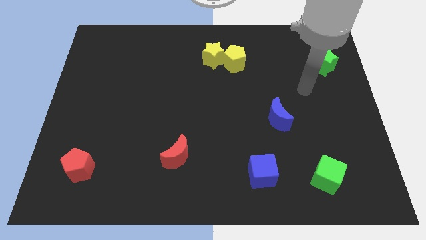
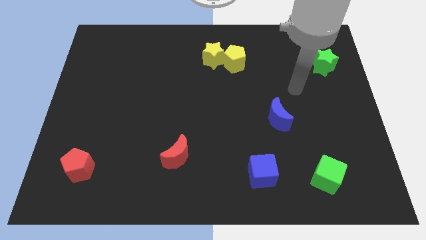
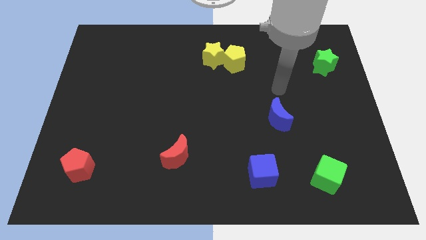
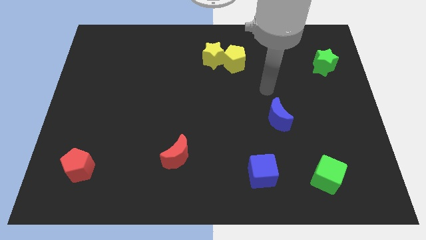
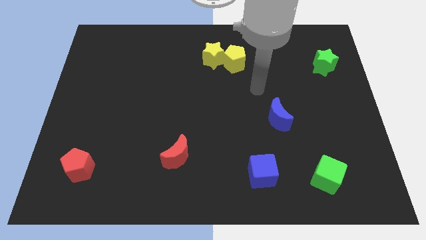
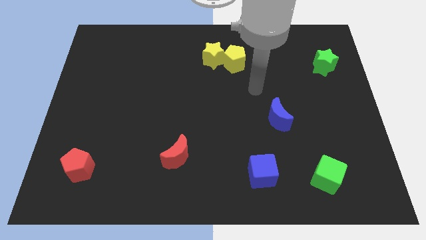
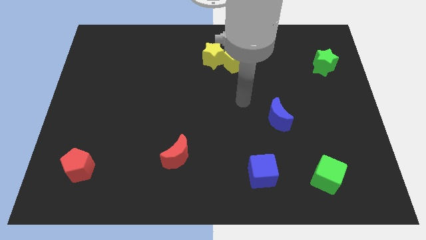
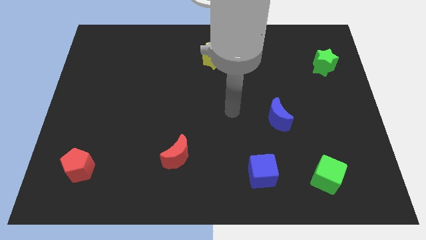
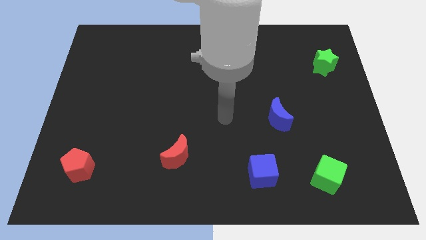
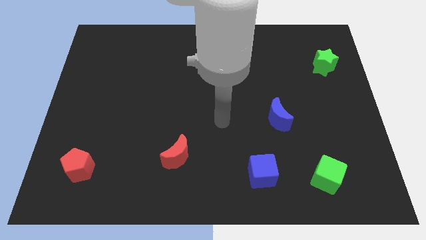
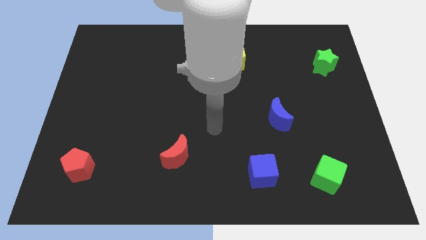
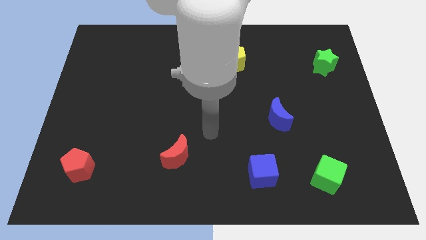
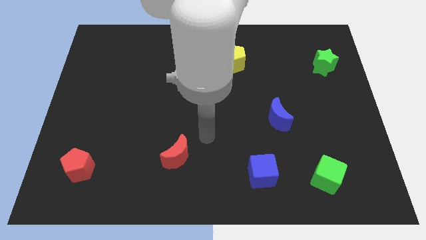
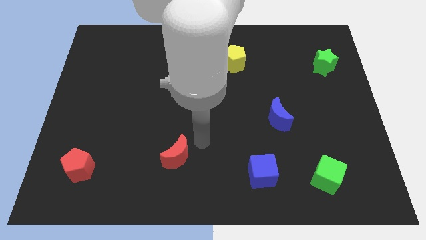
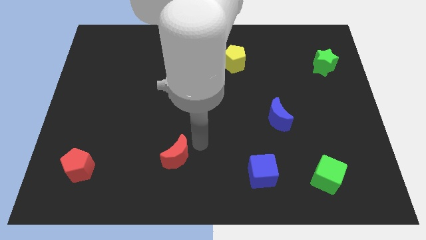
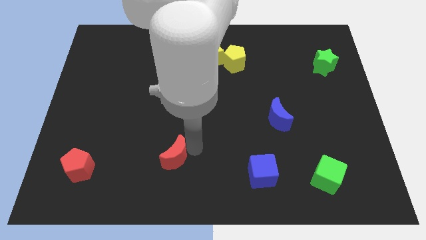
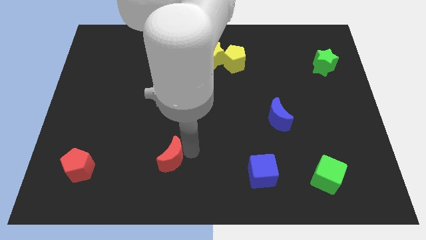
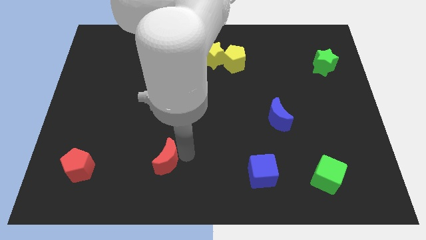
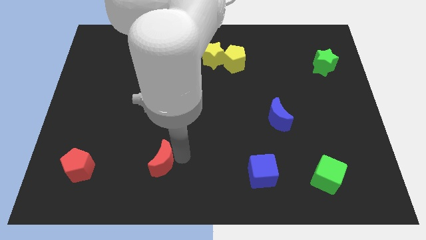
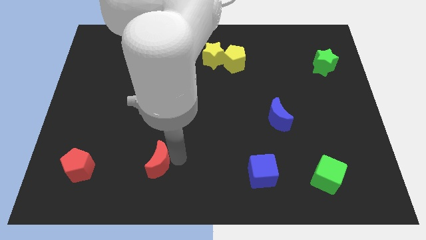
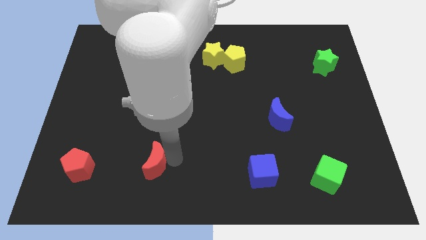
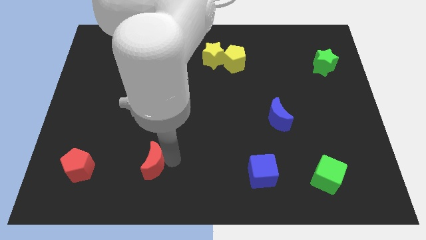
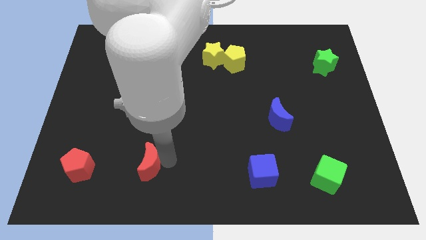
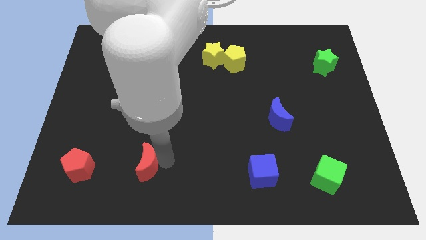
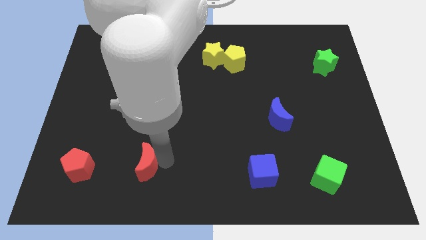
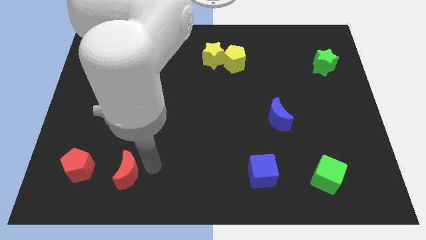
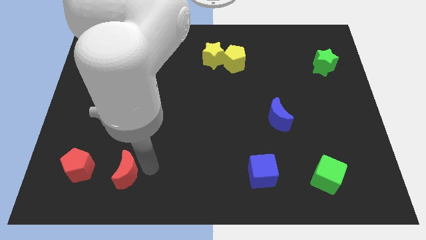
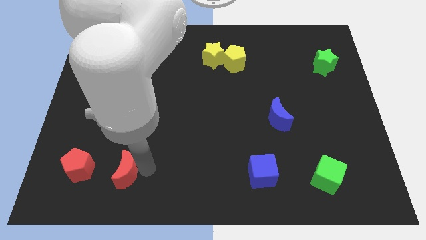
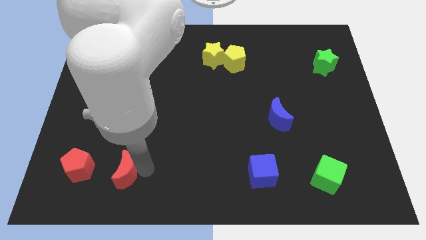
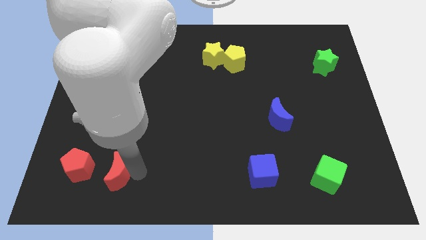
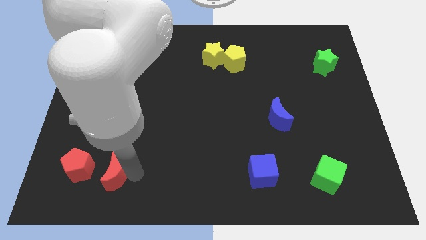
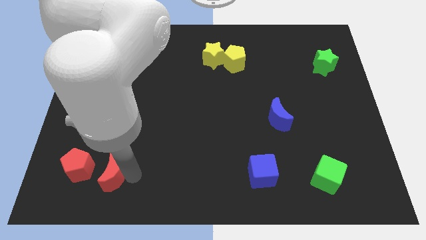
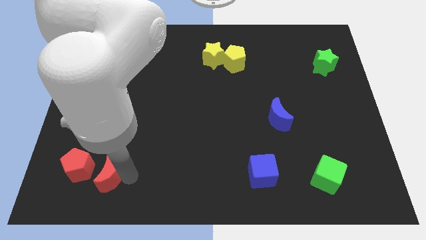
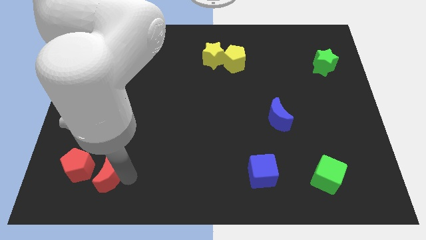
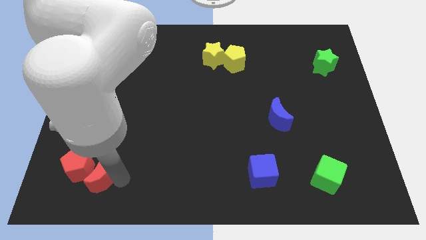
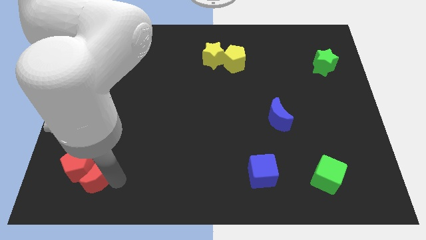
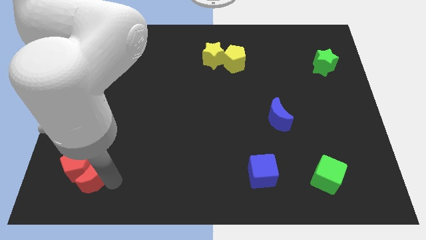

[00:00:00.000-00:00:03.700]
slide the red moon close to the red pentagon

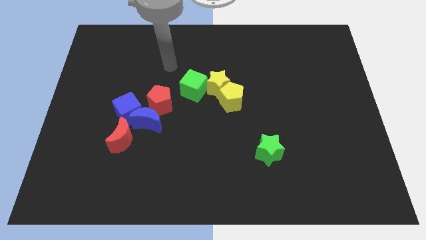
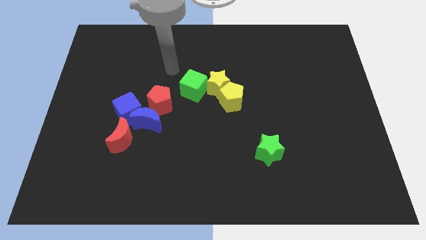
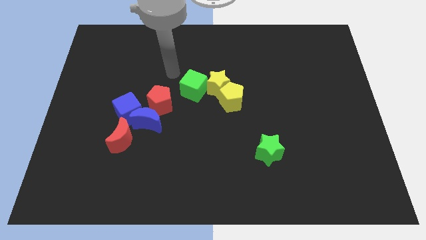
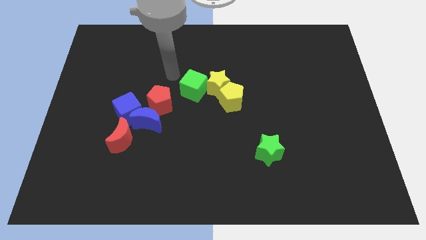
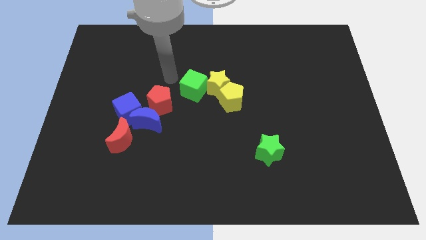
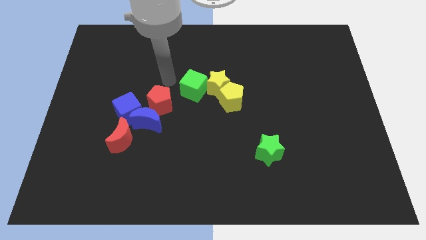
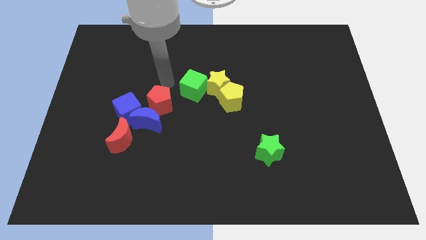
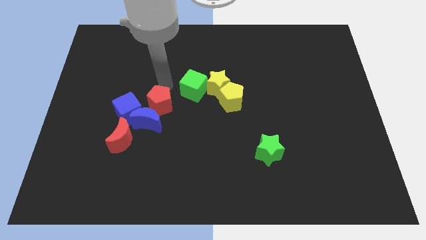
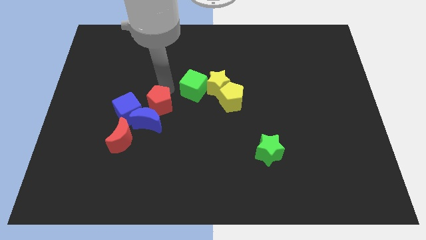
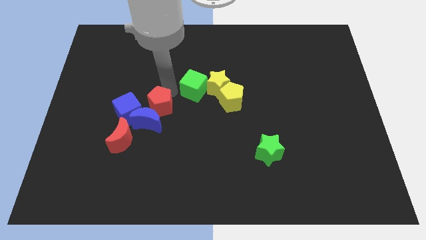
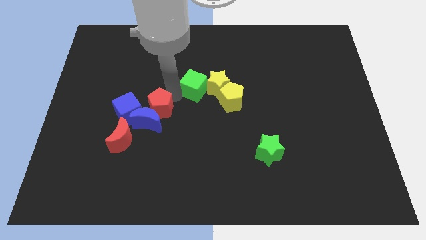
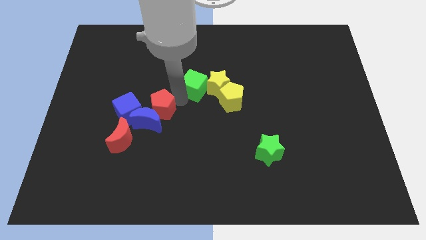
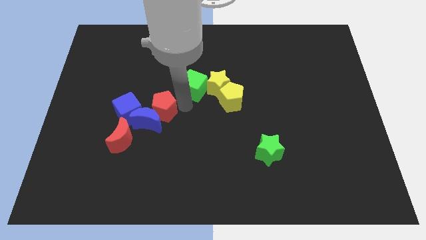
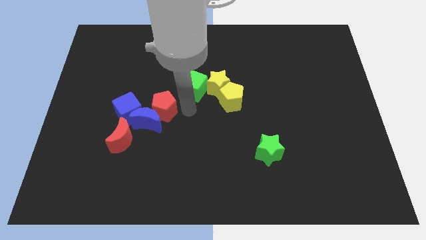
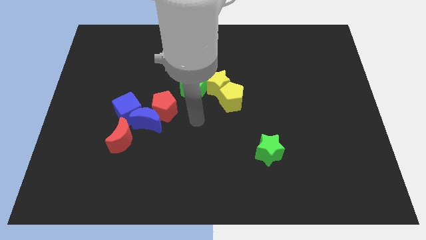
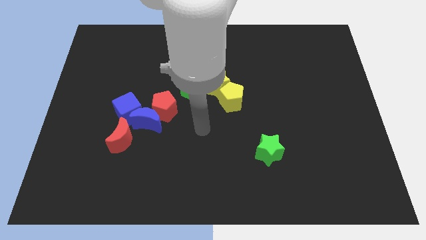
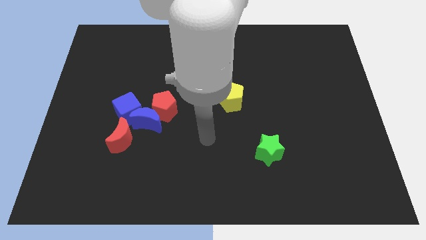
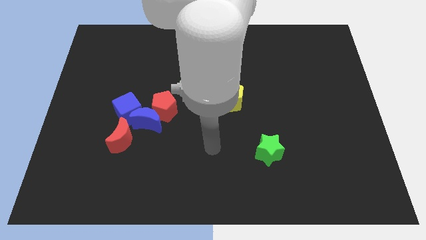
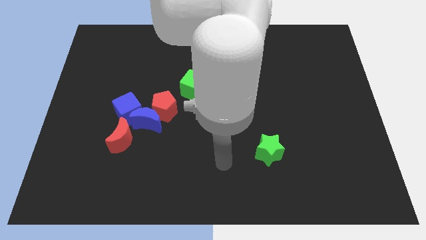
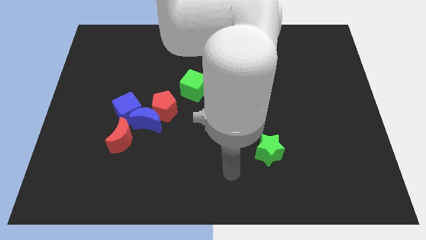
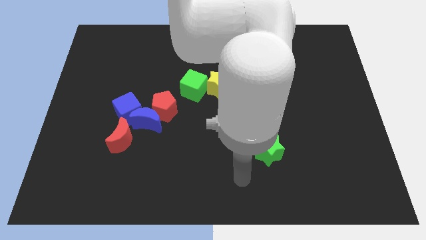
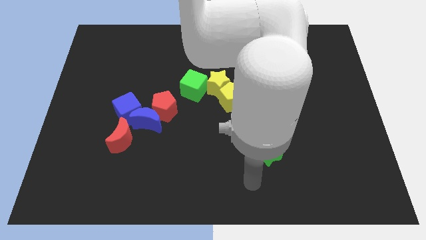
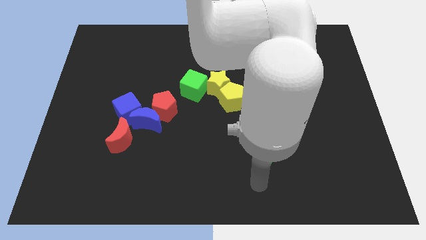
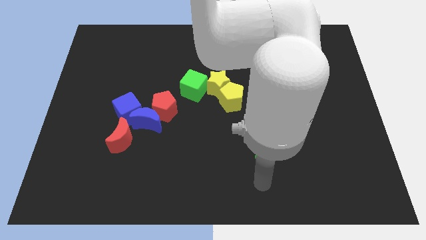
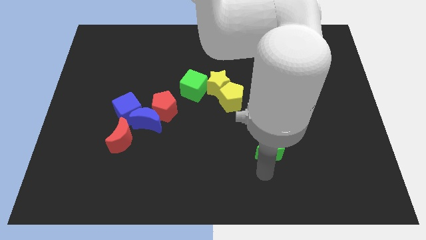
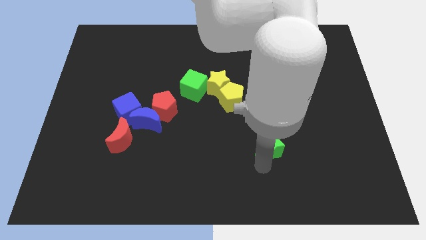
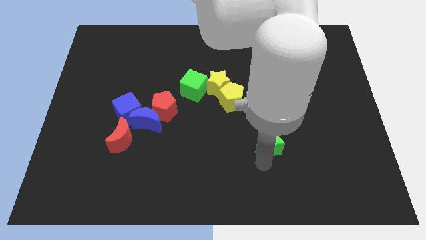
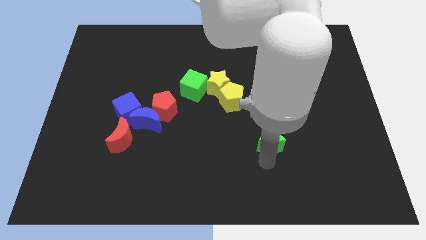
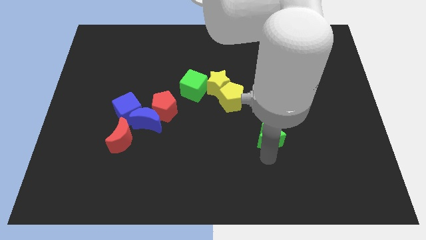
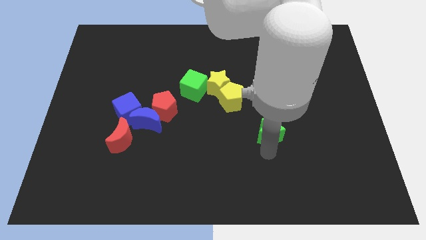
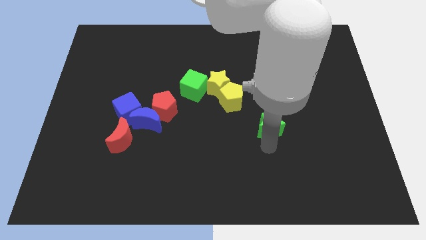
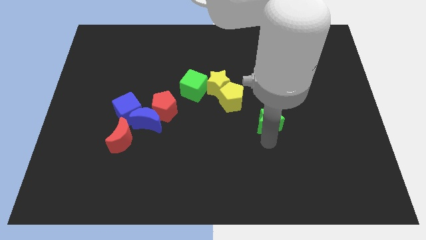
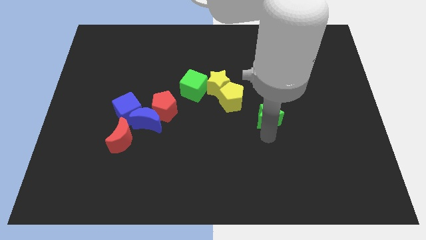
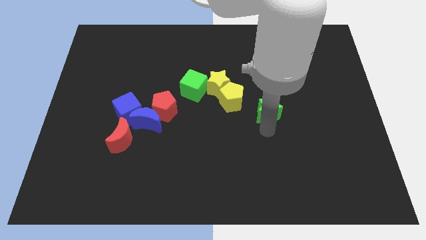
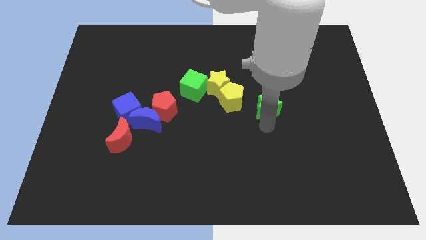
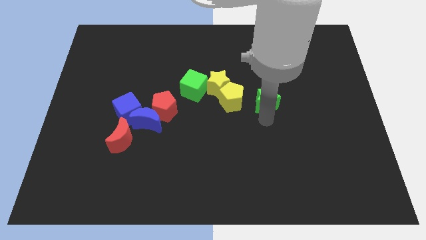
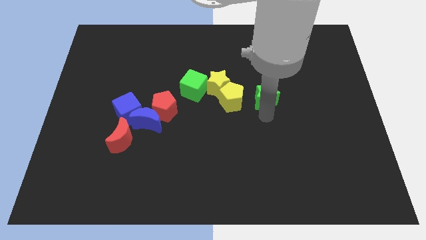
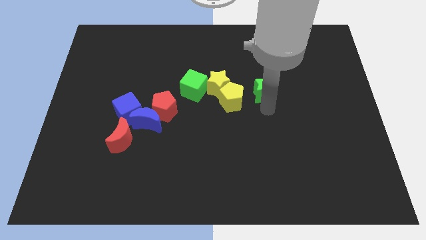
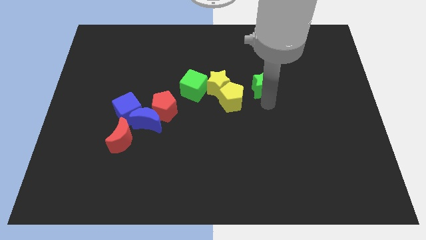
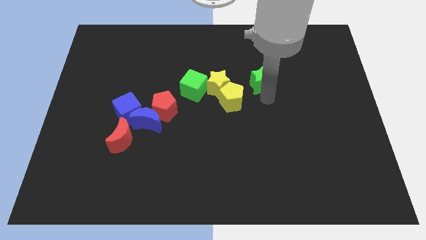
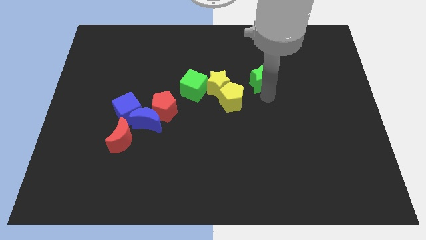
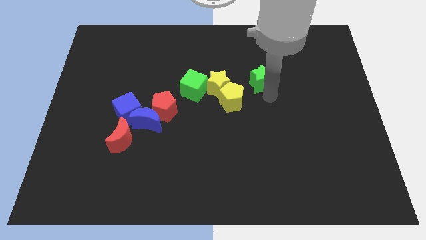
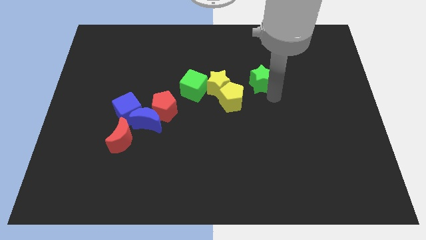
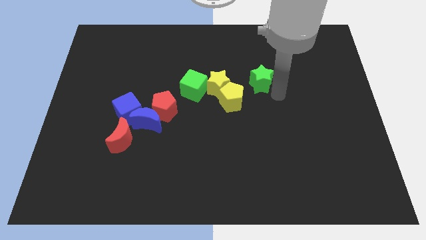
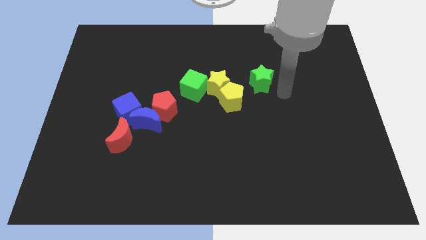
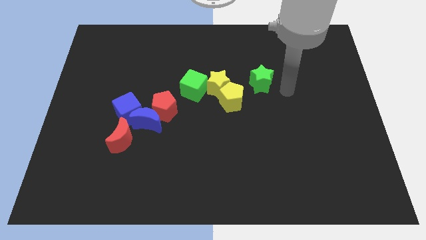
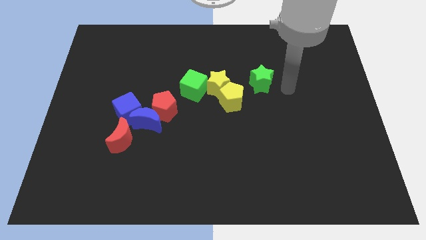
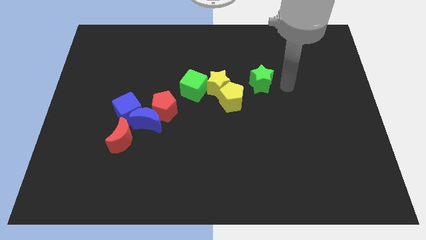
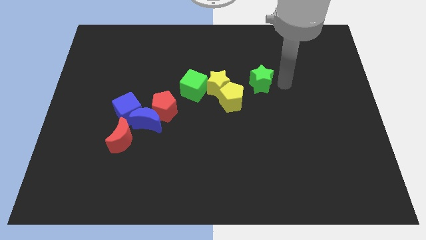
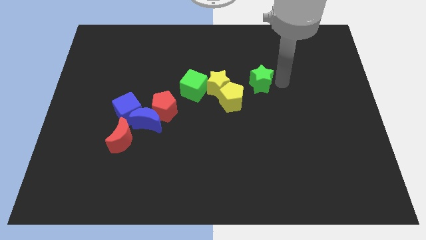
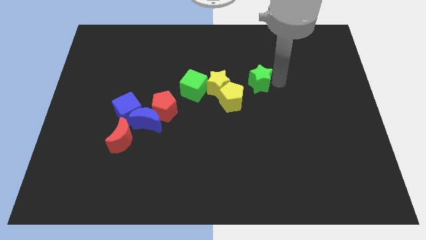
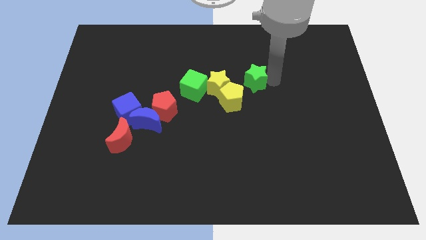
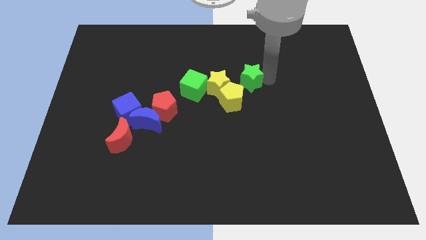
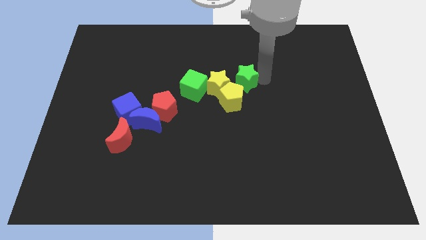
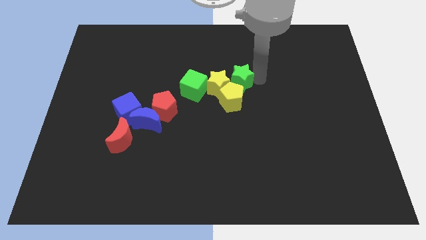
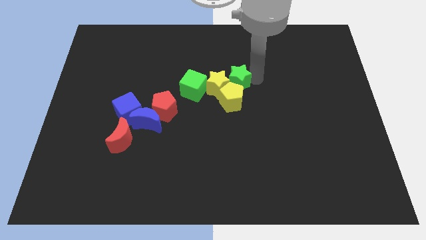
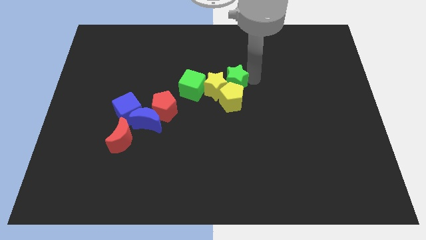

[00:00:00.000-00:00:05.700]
slide the green star to the yellow star
